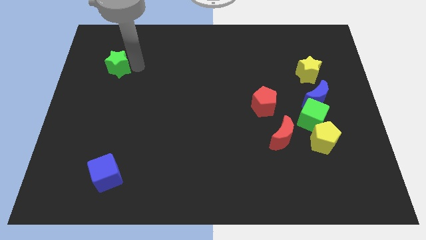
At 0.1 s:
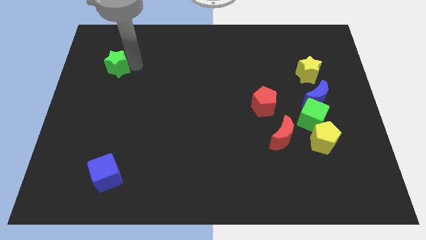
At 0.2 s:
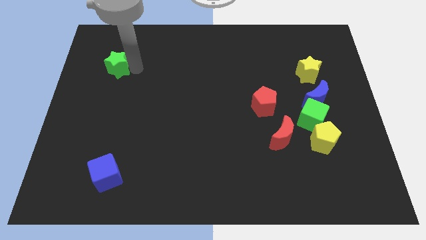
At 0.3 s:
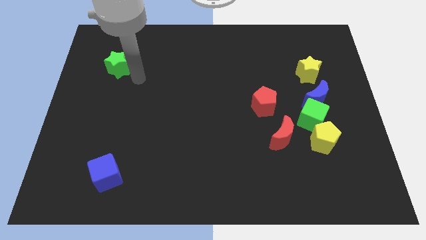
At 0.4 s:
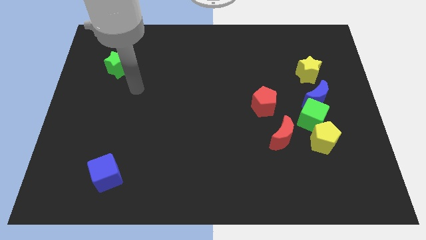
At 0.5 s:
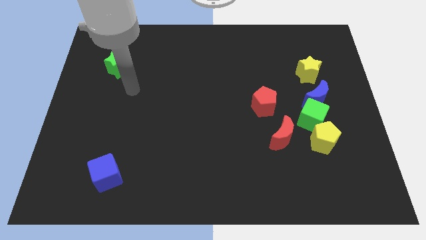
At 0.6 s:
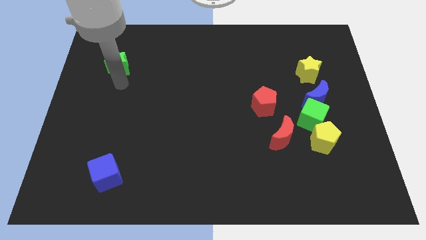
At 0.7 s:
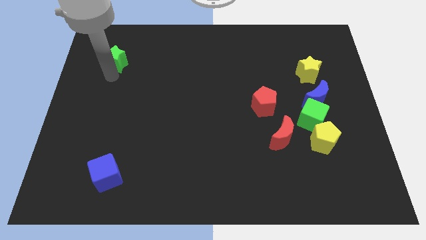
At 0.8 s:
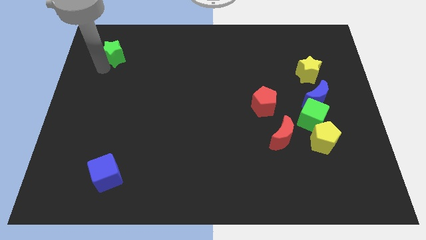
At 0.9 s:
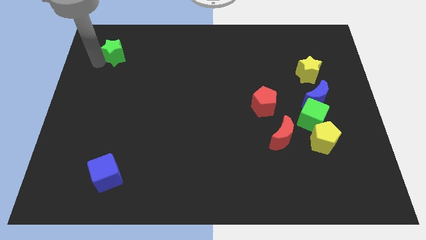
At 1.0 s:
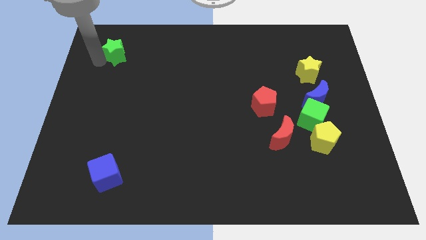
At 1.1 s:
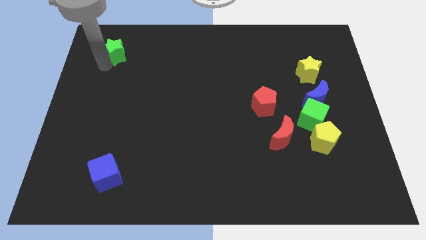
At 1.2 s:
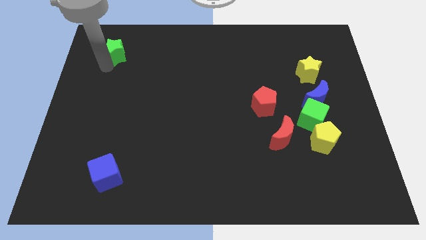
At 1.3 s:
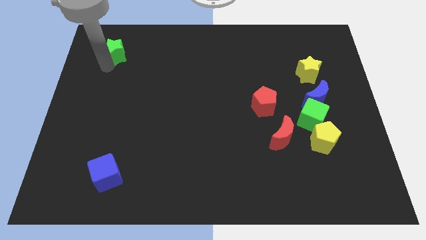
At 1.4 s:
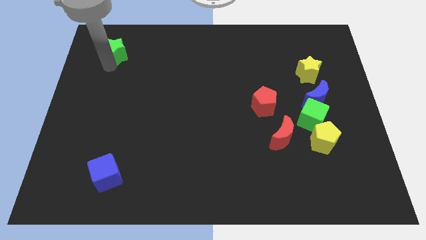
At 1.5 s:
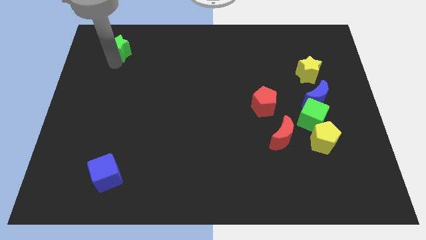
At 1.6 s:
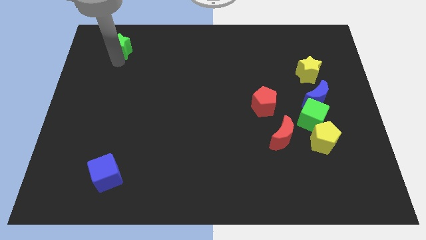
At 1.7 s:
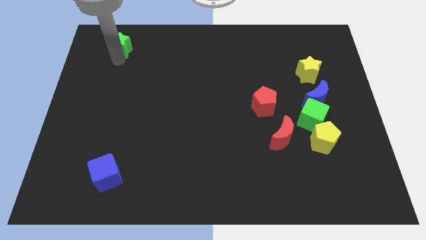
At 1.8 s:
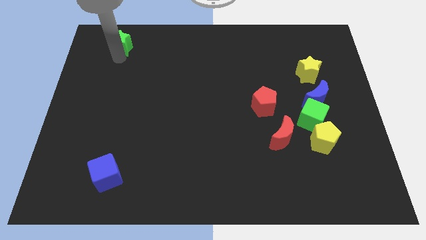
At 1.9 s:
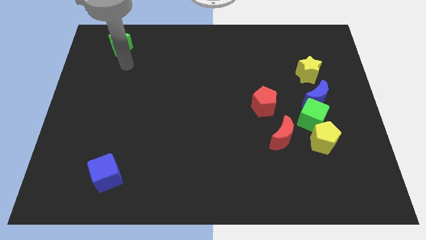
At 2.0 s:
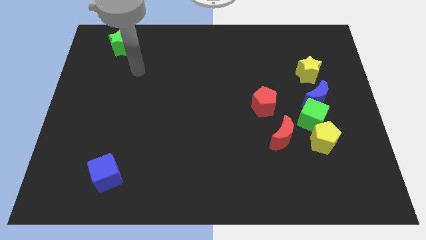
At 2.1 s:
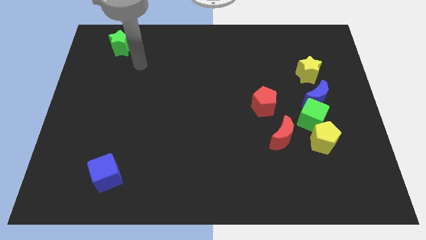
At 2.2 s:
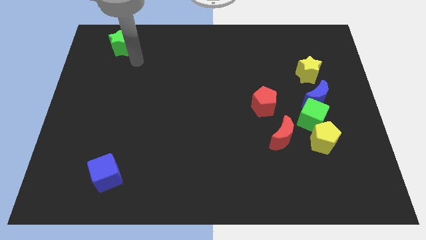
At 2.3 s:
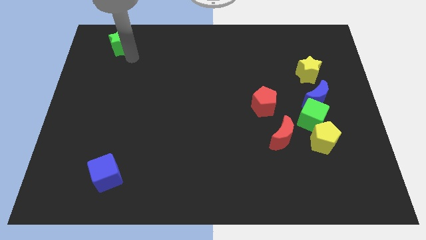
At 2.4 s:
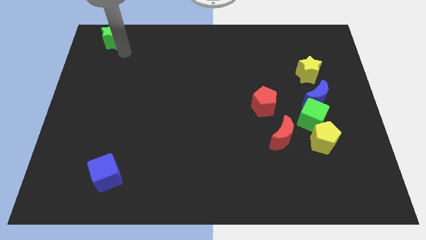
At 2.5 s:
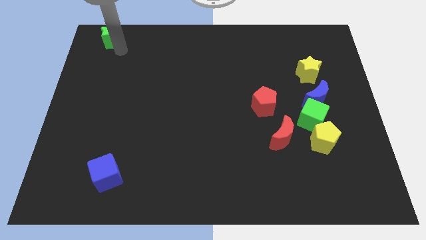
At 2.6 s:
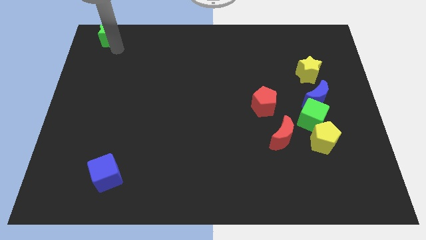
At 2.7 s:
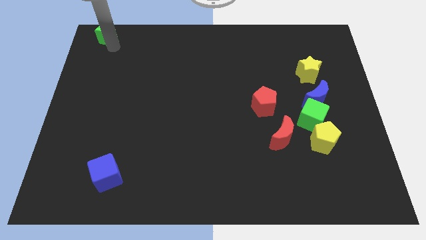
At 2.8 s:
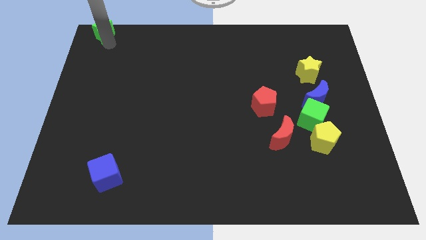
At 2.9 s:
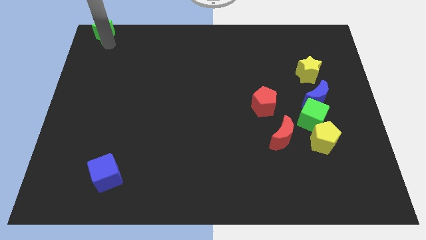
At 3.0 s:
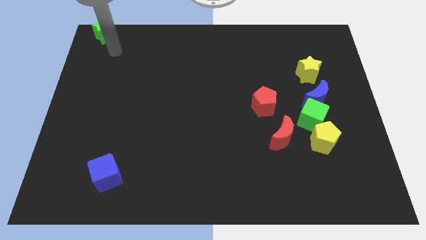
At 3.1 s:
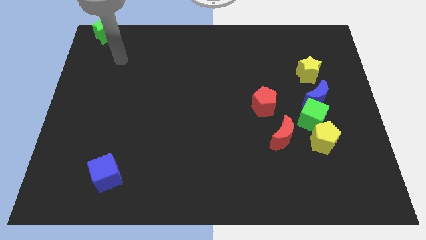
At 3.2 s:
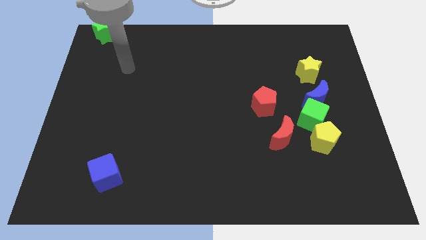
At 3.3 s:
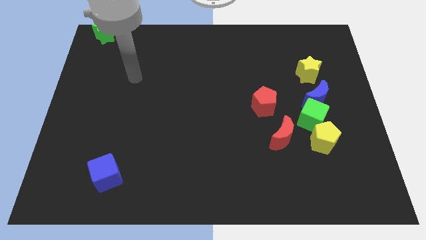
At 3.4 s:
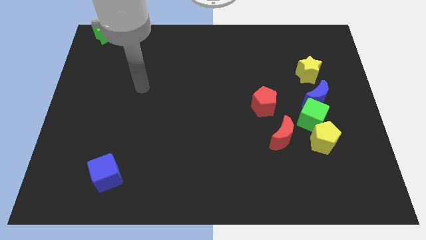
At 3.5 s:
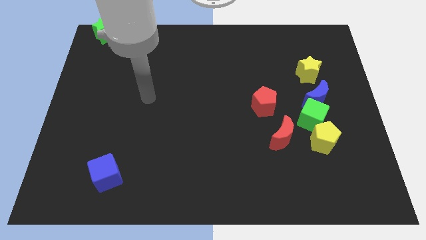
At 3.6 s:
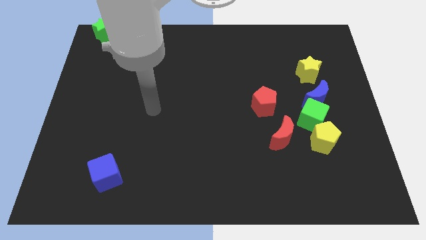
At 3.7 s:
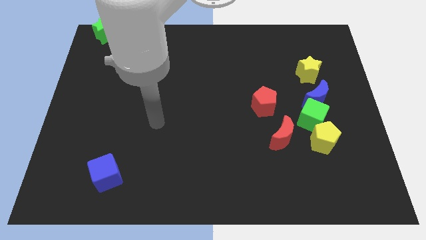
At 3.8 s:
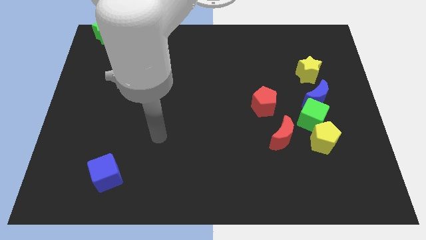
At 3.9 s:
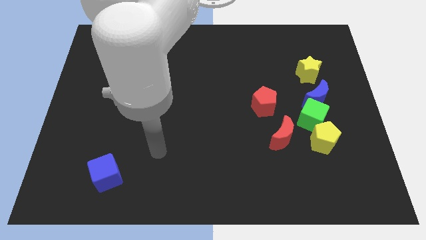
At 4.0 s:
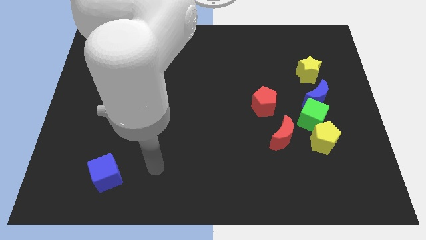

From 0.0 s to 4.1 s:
place the green star to the top left of the board

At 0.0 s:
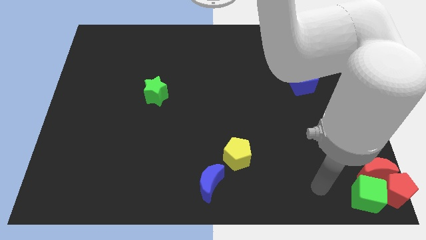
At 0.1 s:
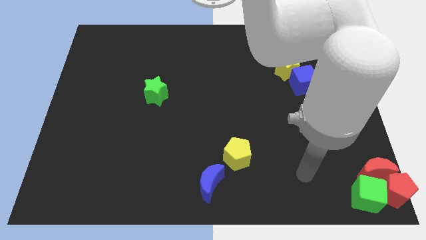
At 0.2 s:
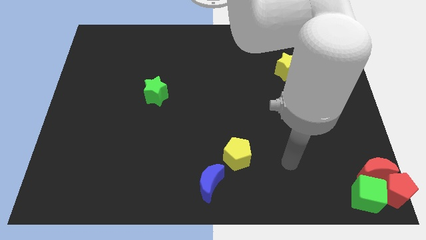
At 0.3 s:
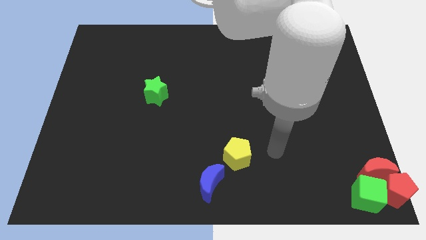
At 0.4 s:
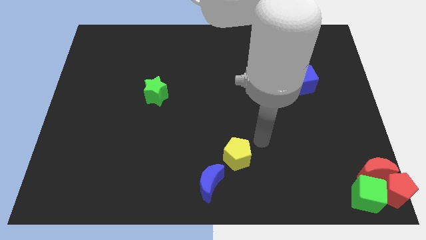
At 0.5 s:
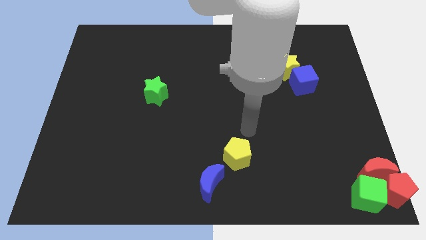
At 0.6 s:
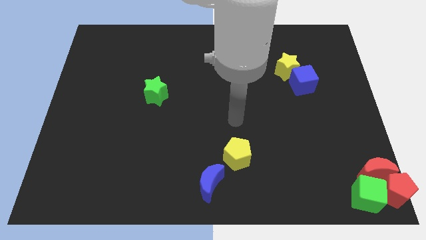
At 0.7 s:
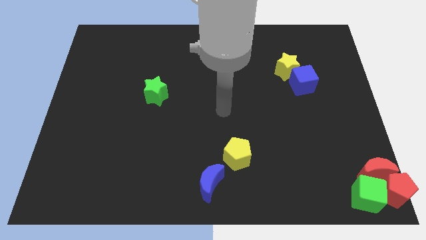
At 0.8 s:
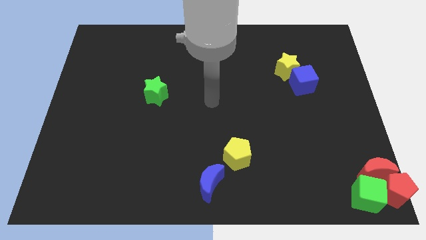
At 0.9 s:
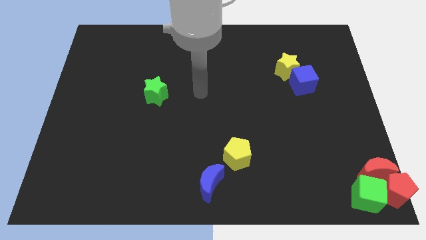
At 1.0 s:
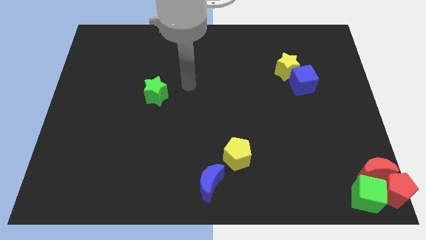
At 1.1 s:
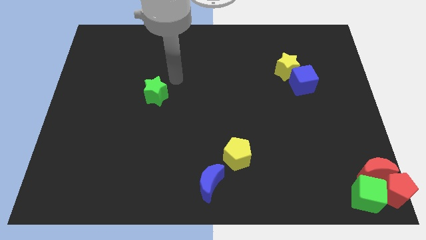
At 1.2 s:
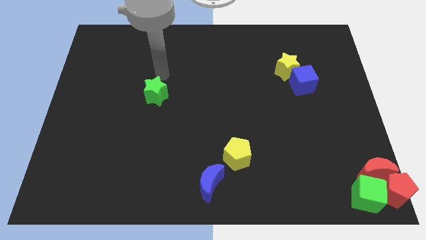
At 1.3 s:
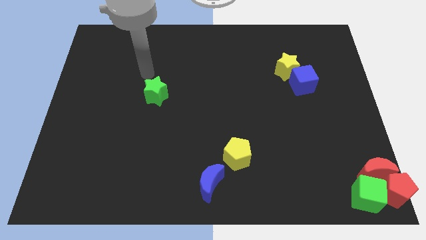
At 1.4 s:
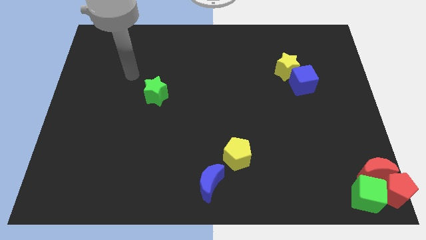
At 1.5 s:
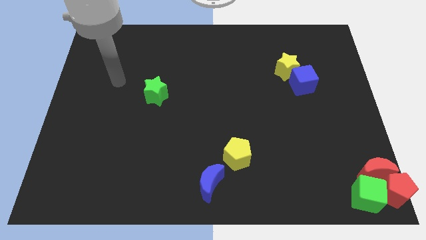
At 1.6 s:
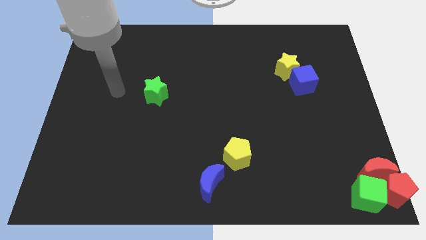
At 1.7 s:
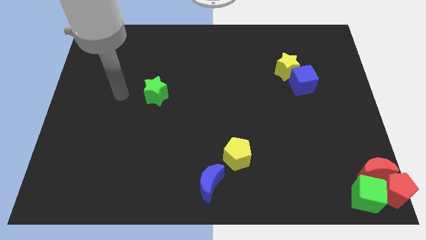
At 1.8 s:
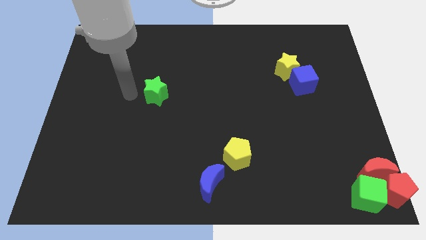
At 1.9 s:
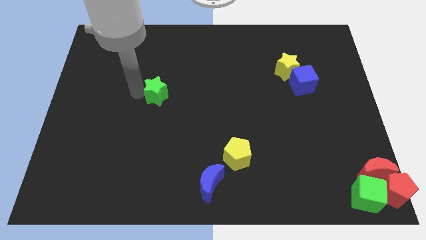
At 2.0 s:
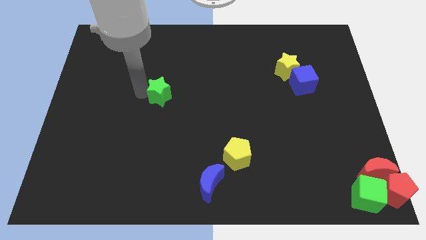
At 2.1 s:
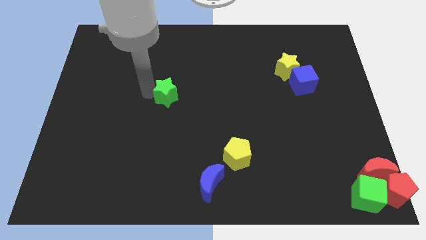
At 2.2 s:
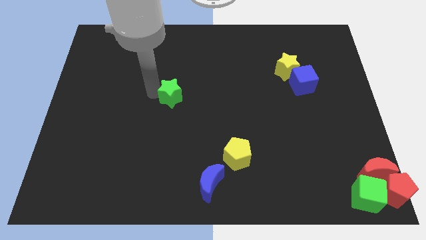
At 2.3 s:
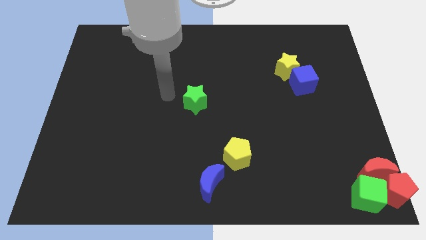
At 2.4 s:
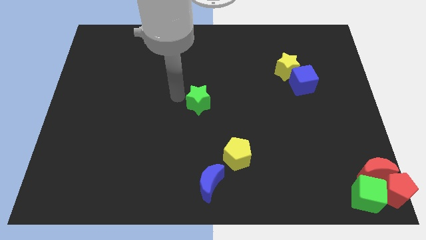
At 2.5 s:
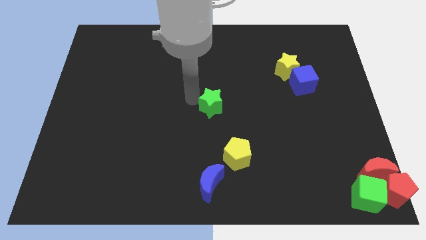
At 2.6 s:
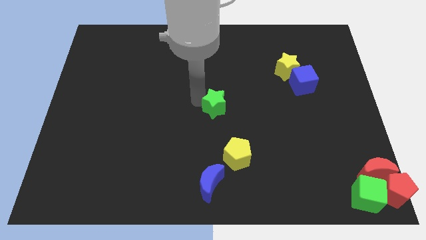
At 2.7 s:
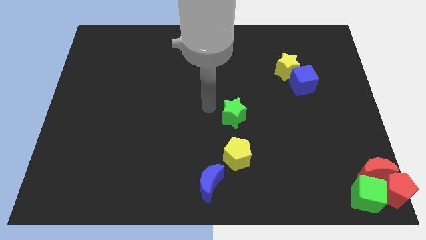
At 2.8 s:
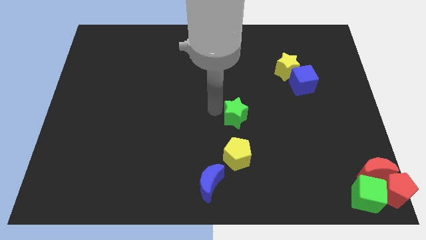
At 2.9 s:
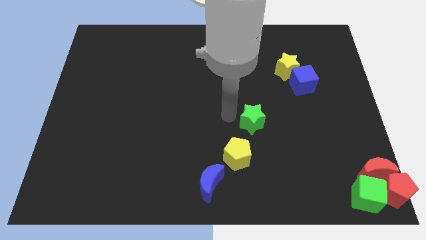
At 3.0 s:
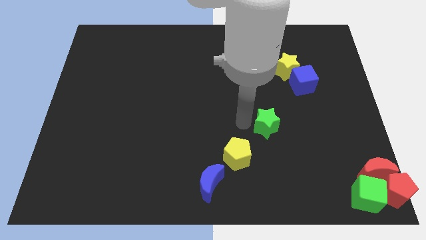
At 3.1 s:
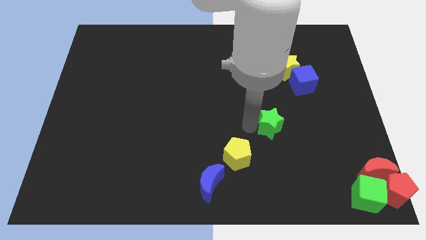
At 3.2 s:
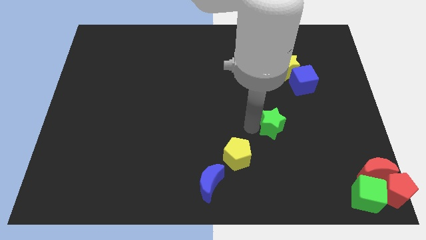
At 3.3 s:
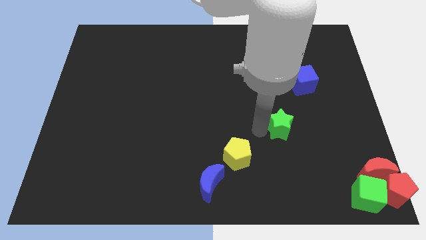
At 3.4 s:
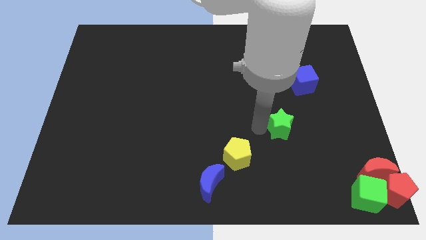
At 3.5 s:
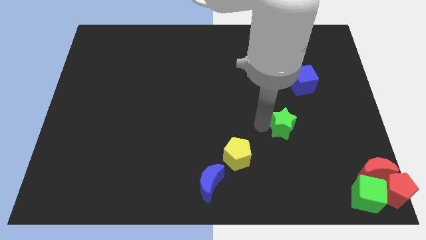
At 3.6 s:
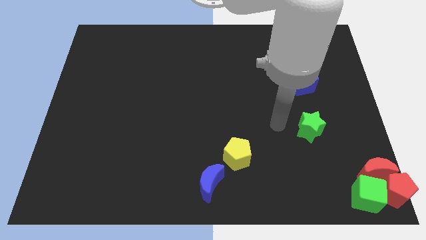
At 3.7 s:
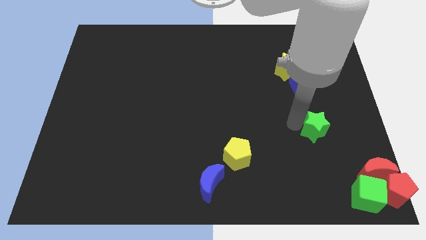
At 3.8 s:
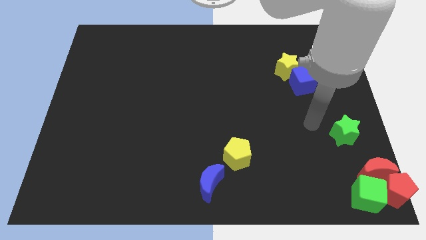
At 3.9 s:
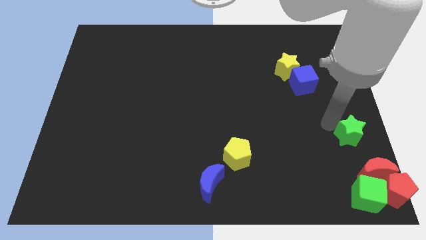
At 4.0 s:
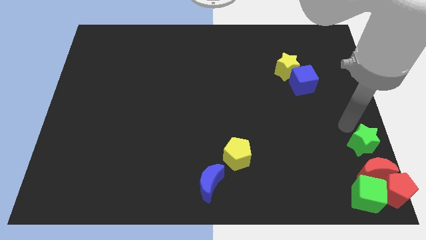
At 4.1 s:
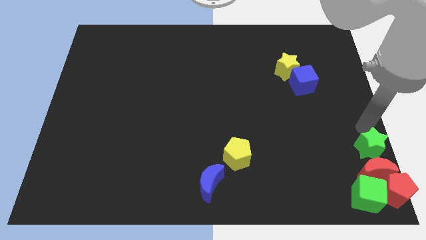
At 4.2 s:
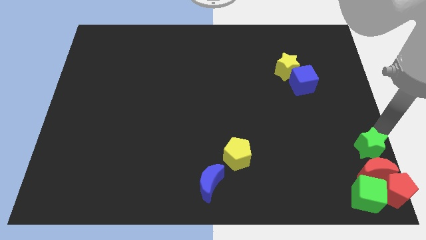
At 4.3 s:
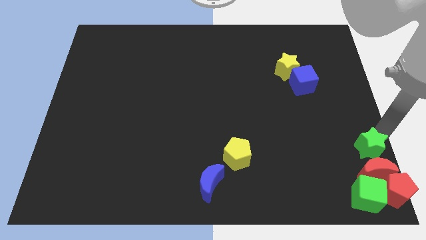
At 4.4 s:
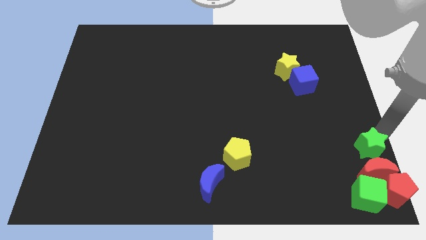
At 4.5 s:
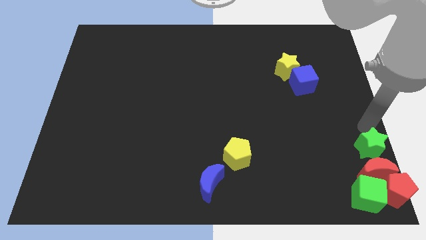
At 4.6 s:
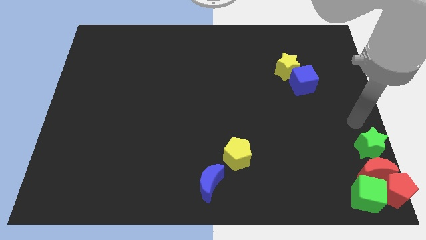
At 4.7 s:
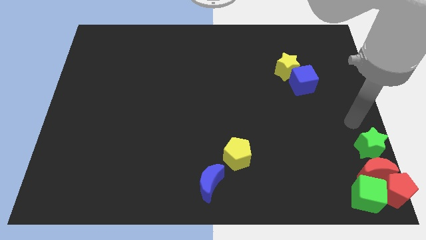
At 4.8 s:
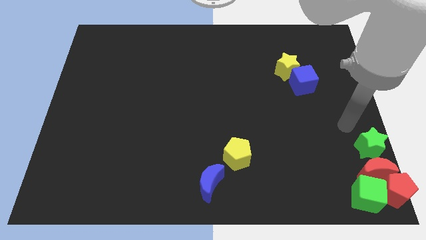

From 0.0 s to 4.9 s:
place the green star above the red crescent
